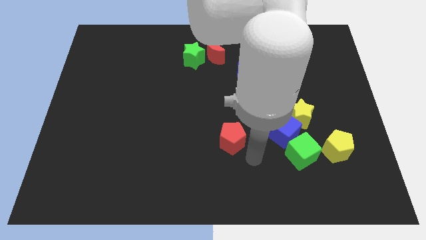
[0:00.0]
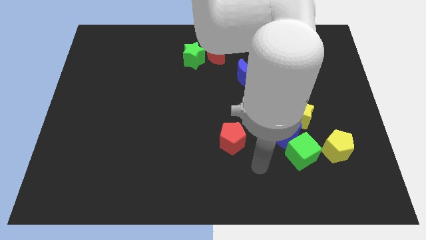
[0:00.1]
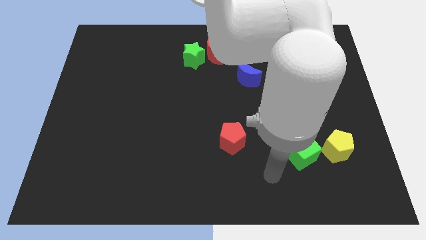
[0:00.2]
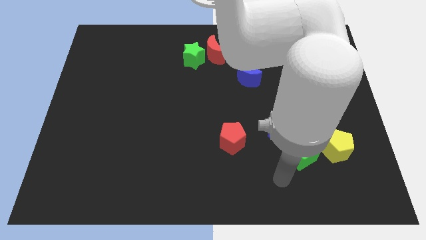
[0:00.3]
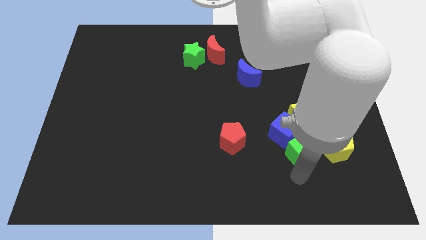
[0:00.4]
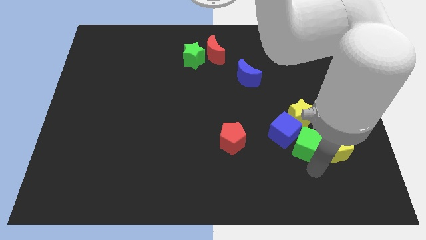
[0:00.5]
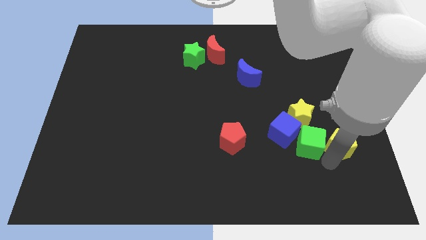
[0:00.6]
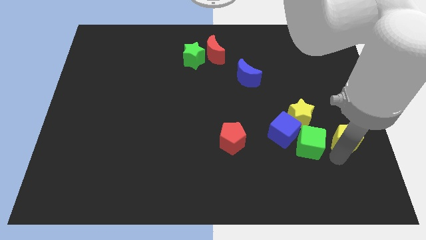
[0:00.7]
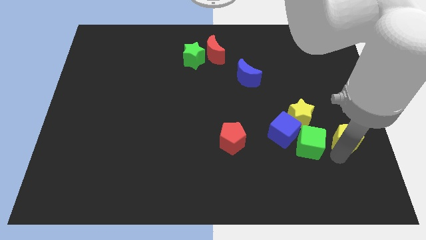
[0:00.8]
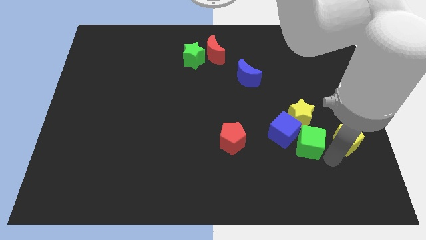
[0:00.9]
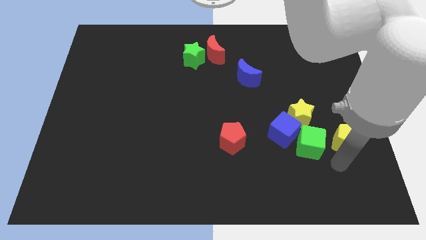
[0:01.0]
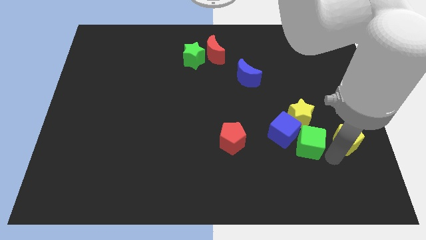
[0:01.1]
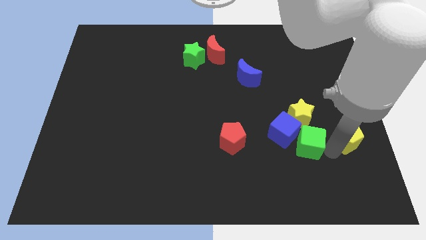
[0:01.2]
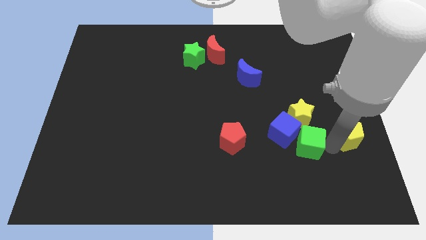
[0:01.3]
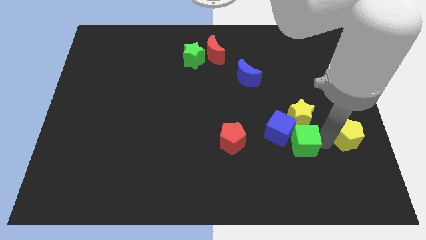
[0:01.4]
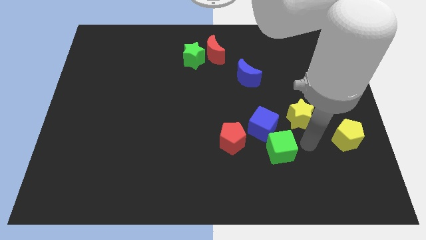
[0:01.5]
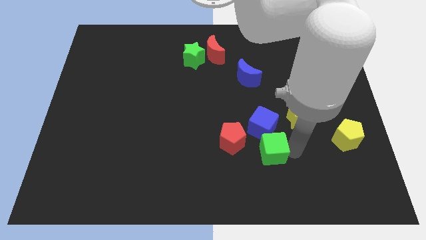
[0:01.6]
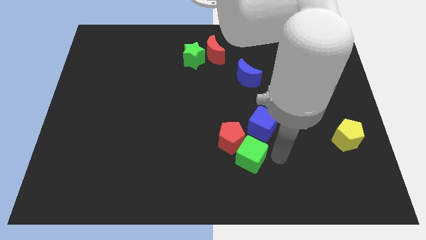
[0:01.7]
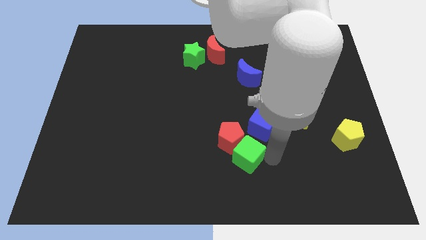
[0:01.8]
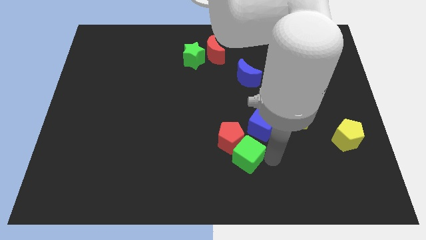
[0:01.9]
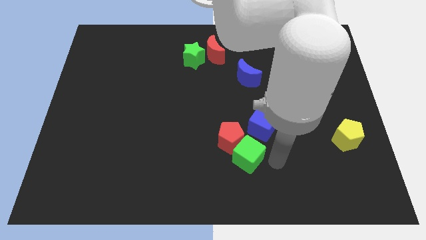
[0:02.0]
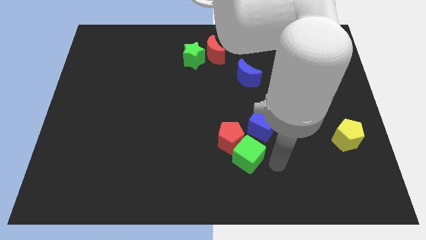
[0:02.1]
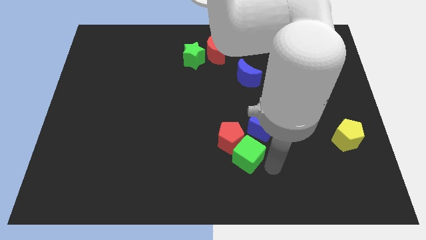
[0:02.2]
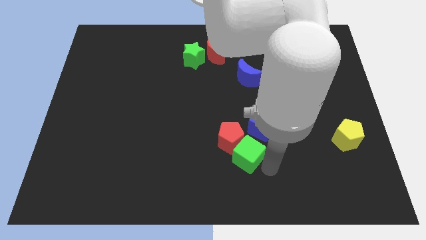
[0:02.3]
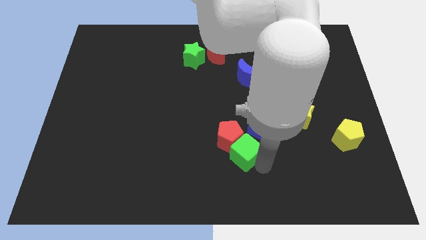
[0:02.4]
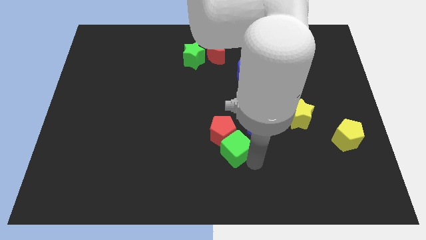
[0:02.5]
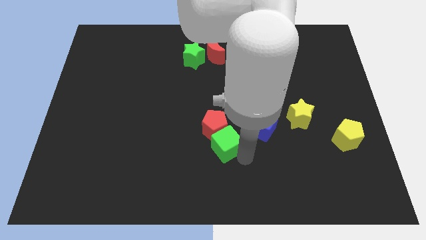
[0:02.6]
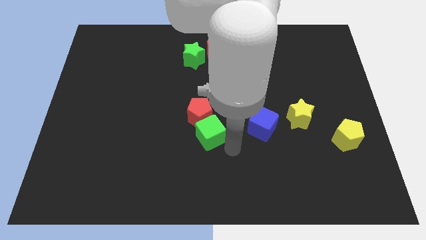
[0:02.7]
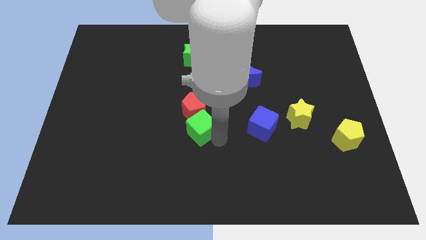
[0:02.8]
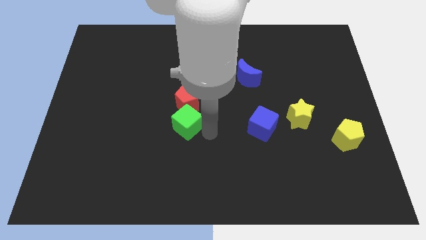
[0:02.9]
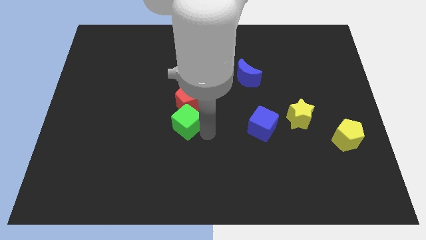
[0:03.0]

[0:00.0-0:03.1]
move green cube into the red pentagon

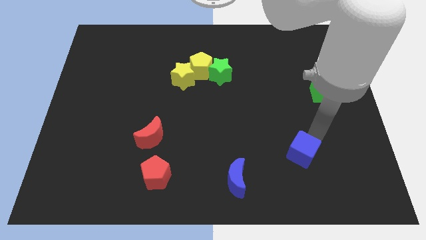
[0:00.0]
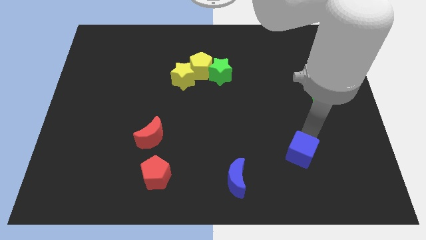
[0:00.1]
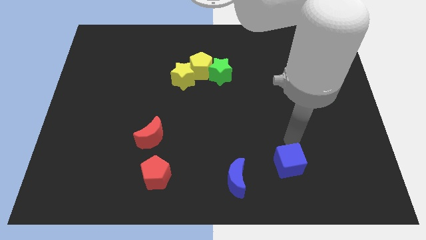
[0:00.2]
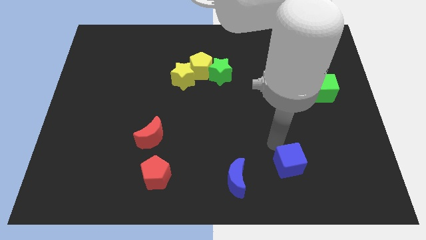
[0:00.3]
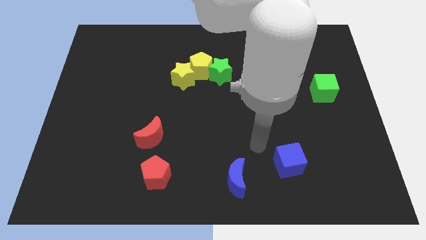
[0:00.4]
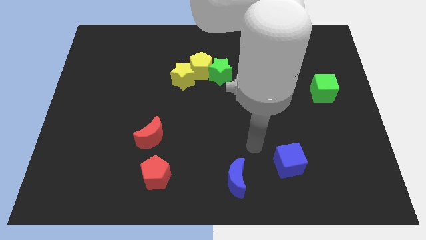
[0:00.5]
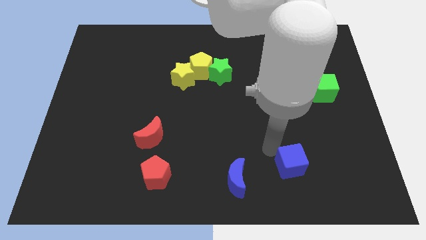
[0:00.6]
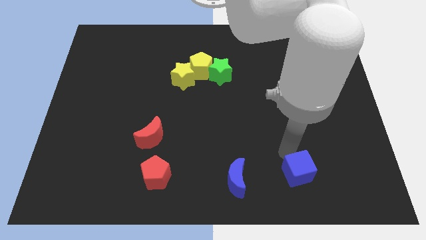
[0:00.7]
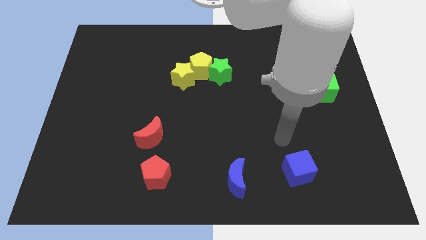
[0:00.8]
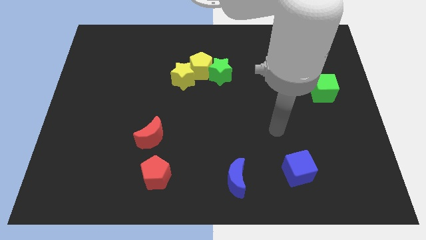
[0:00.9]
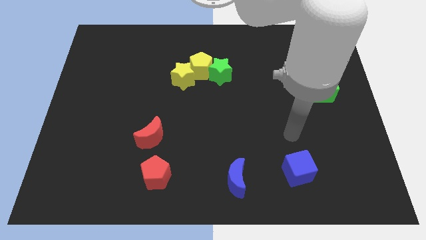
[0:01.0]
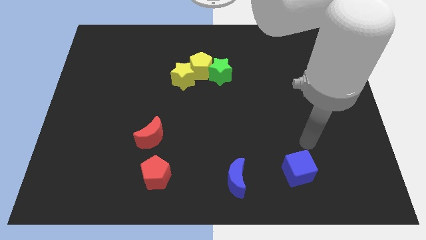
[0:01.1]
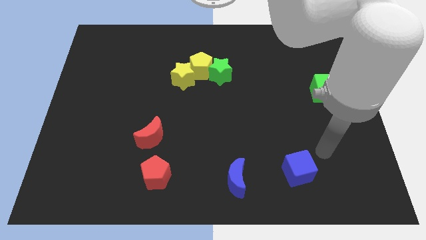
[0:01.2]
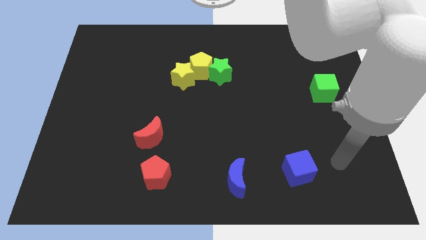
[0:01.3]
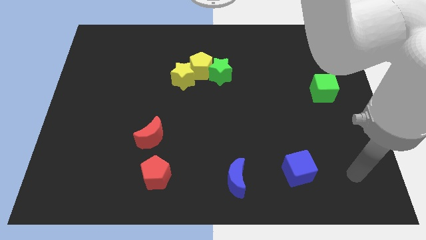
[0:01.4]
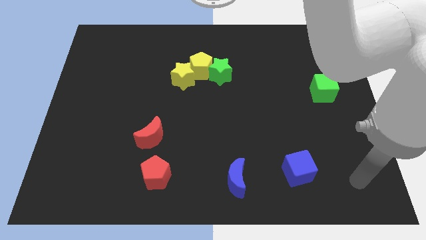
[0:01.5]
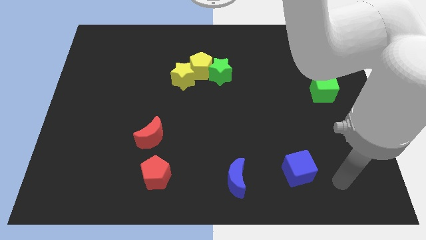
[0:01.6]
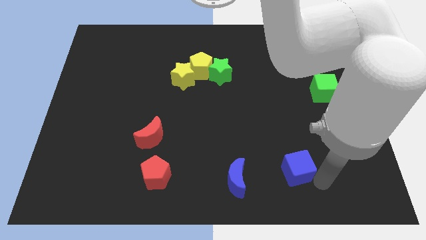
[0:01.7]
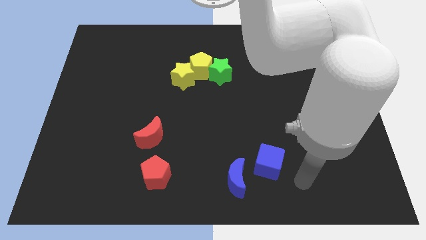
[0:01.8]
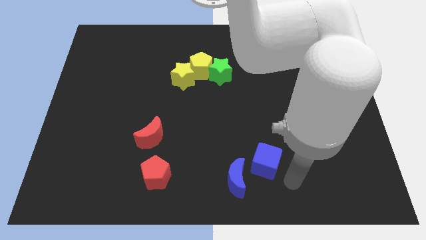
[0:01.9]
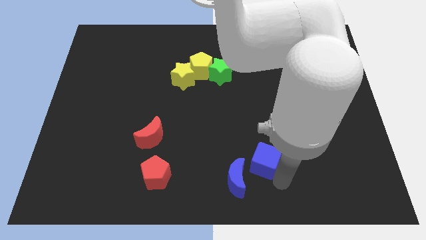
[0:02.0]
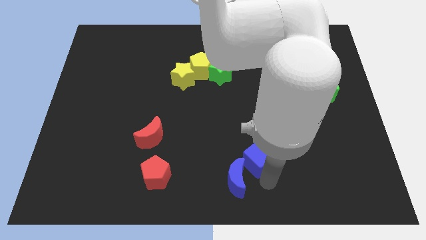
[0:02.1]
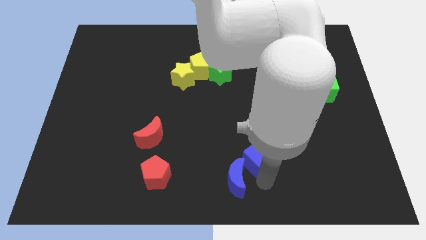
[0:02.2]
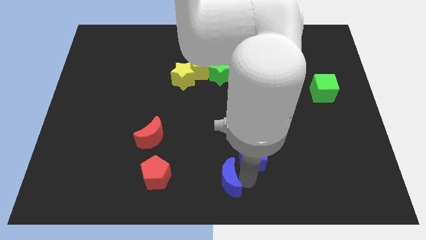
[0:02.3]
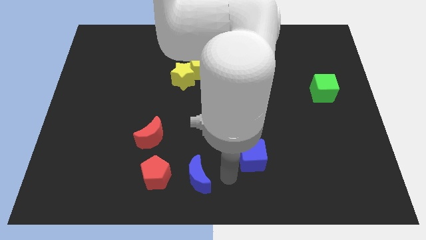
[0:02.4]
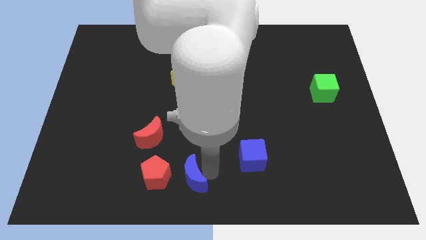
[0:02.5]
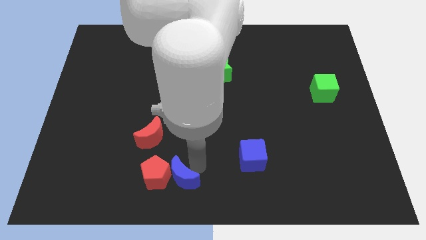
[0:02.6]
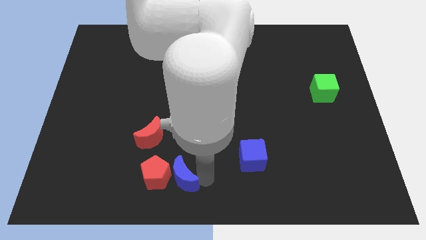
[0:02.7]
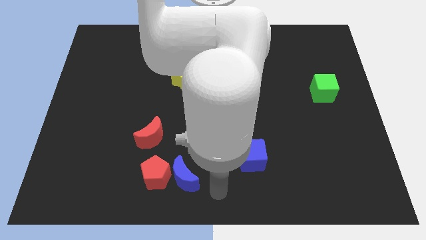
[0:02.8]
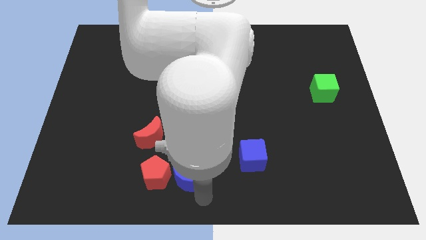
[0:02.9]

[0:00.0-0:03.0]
drag the blue moon close to the red pentagon

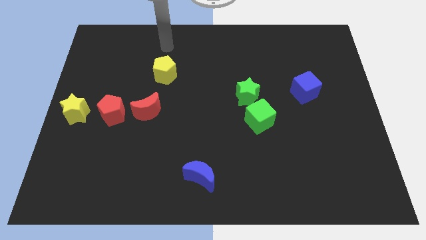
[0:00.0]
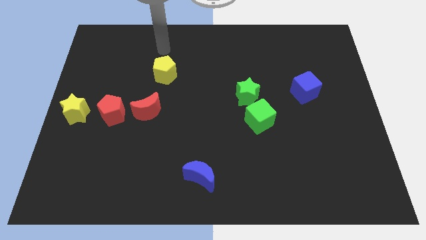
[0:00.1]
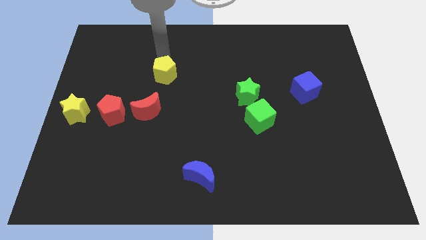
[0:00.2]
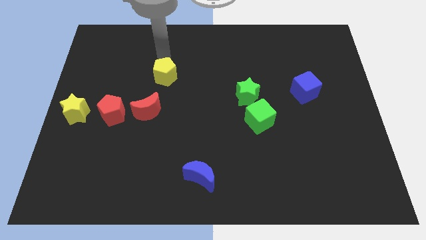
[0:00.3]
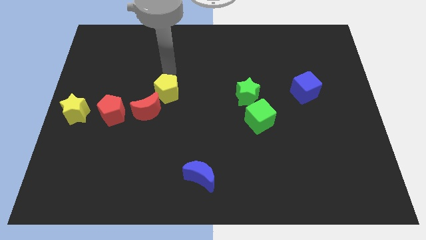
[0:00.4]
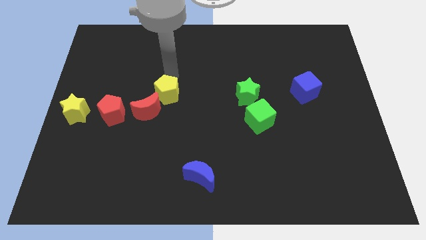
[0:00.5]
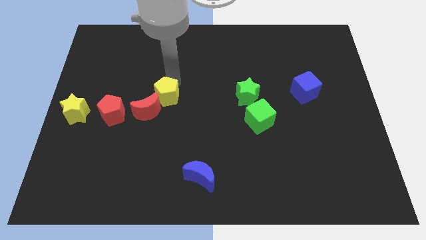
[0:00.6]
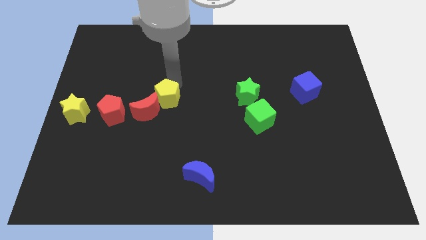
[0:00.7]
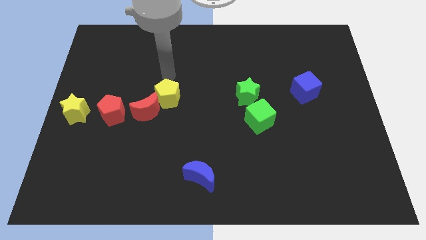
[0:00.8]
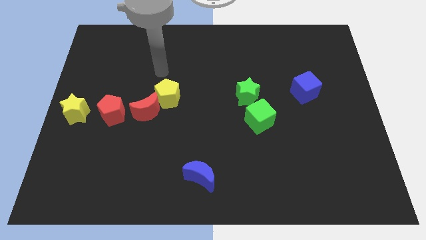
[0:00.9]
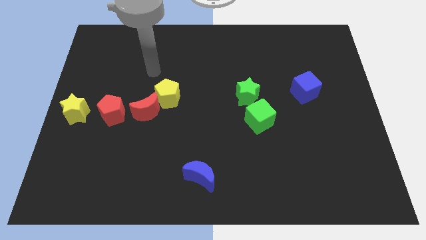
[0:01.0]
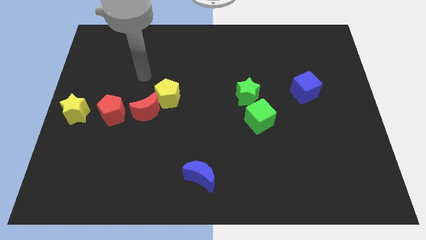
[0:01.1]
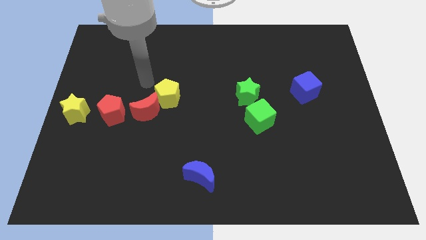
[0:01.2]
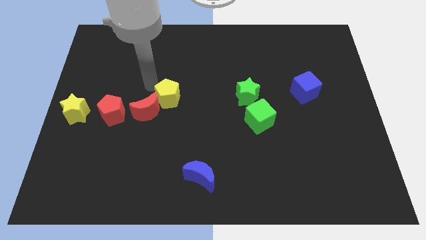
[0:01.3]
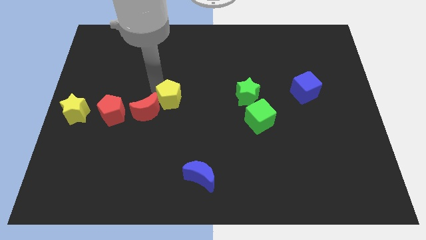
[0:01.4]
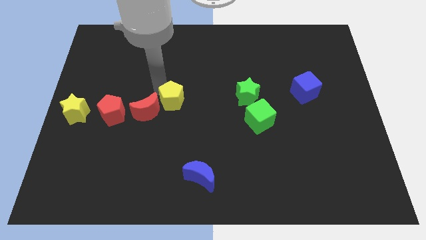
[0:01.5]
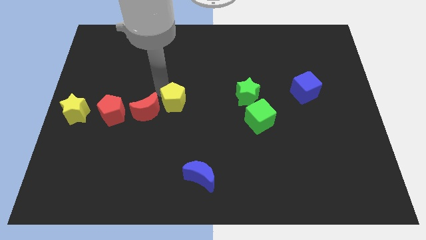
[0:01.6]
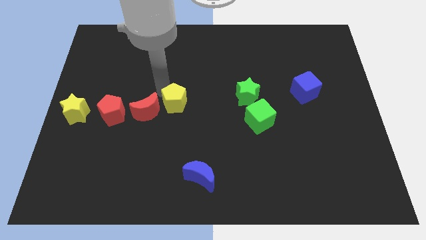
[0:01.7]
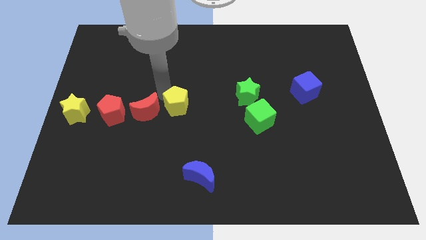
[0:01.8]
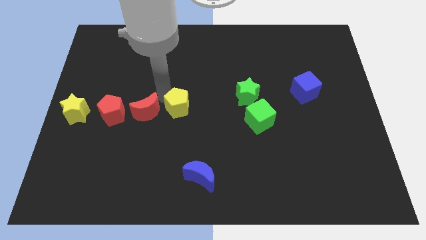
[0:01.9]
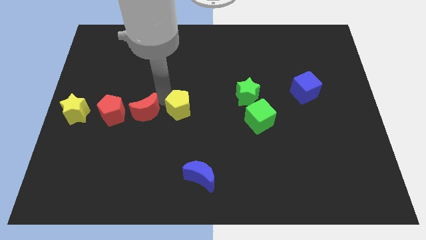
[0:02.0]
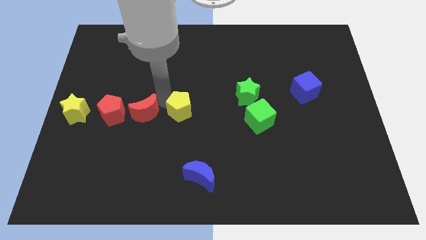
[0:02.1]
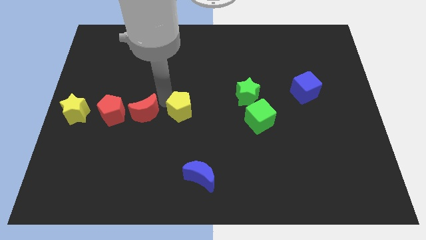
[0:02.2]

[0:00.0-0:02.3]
move the yellow pentagon to the right of the red crescent

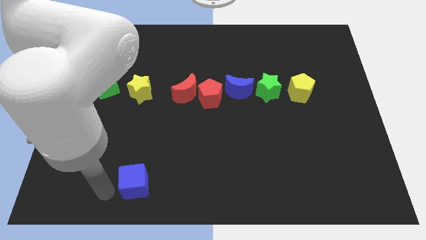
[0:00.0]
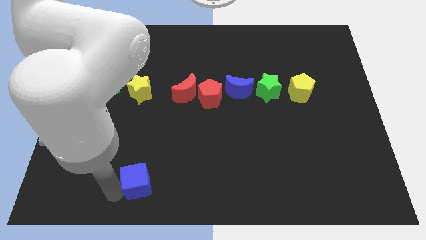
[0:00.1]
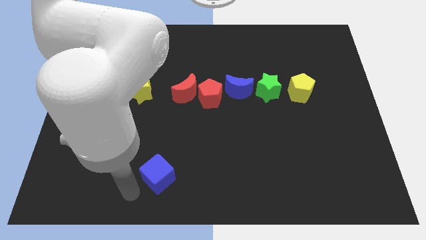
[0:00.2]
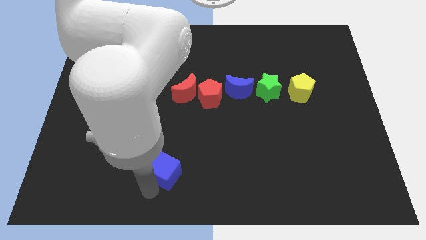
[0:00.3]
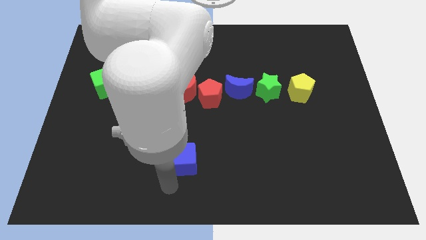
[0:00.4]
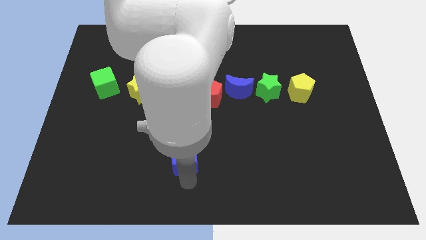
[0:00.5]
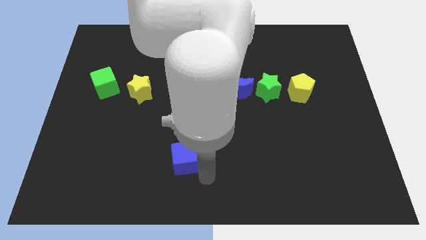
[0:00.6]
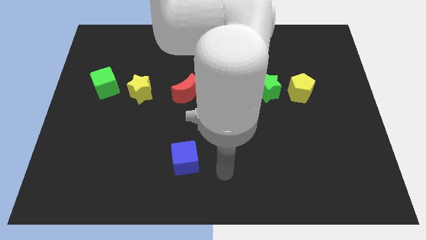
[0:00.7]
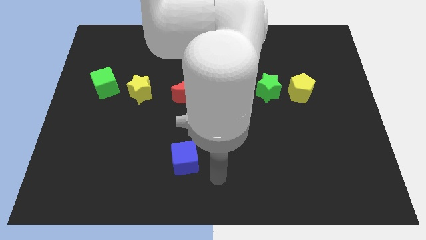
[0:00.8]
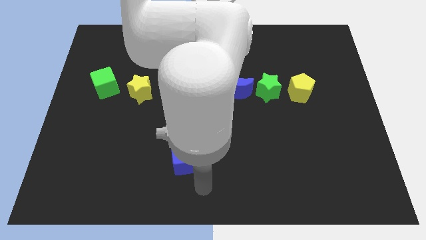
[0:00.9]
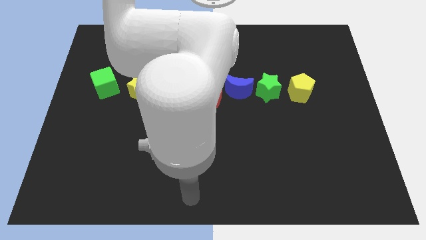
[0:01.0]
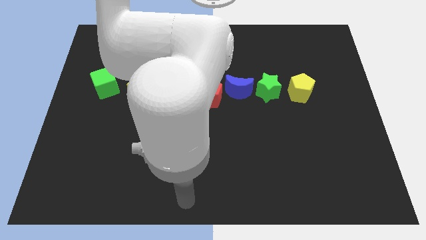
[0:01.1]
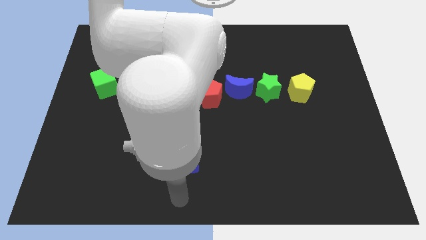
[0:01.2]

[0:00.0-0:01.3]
move the blue cube to the bottom side of the red moon
